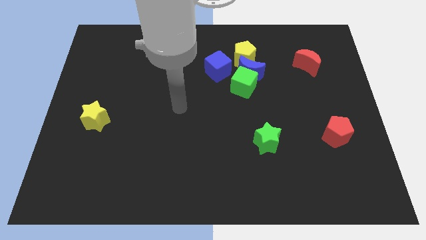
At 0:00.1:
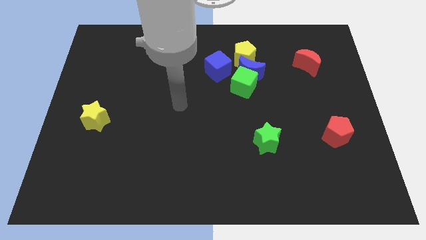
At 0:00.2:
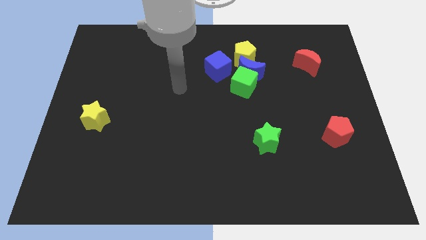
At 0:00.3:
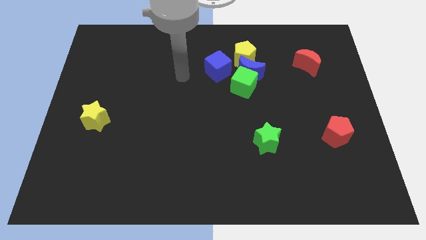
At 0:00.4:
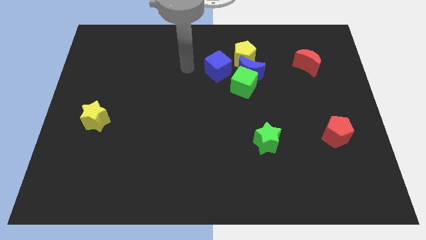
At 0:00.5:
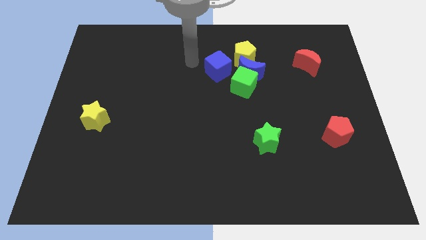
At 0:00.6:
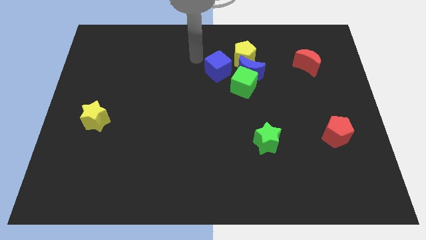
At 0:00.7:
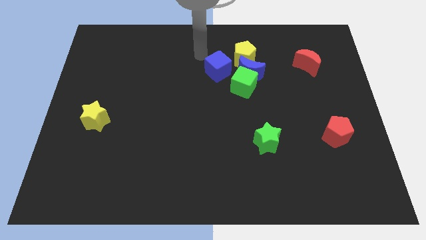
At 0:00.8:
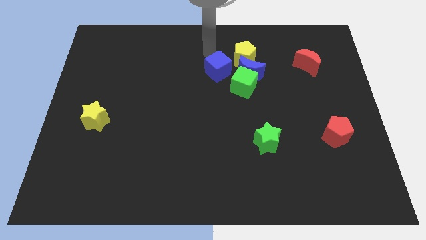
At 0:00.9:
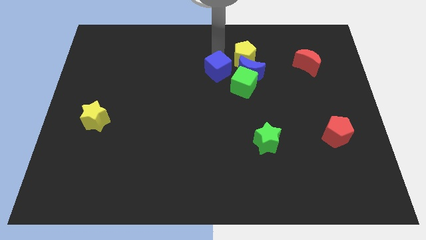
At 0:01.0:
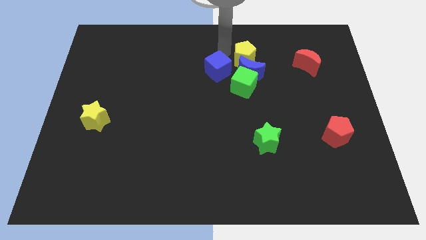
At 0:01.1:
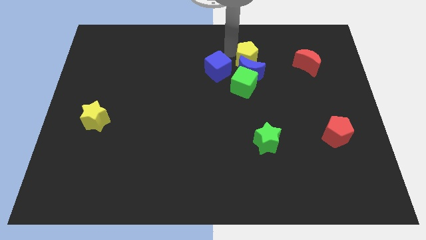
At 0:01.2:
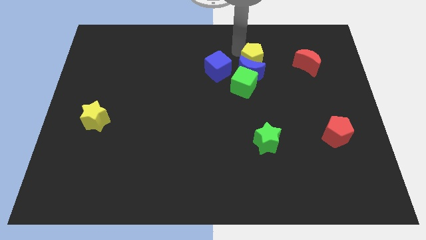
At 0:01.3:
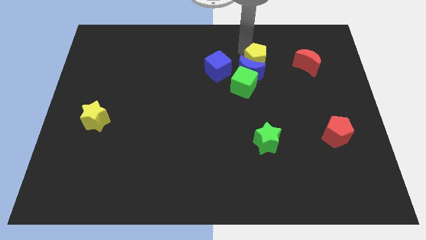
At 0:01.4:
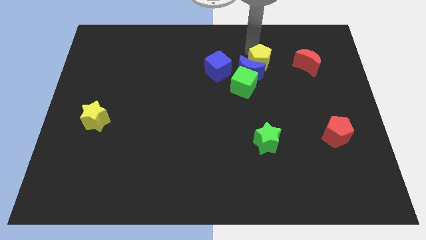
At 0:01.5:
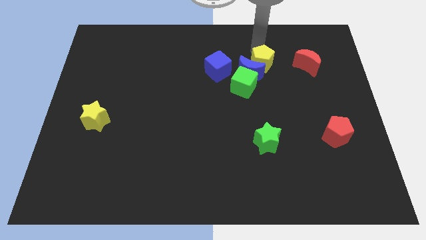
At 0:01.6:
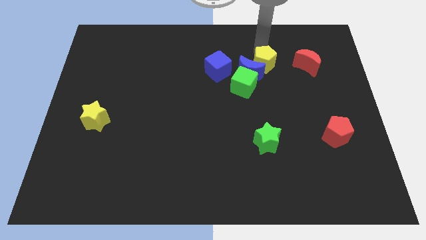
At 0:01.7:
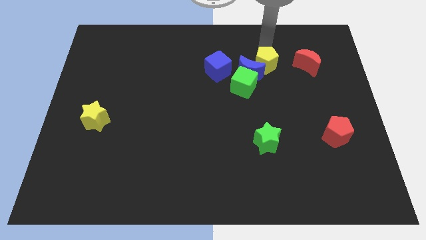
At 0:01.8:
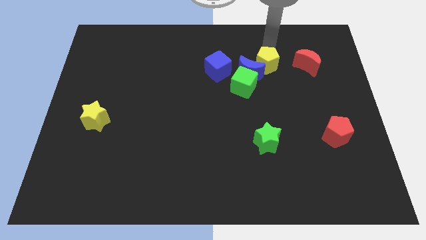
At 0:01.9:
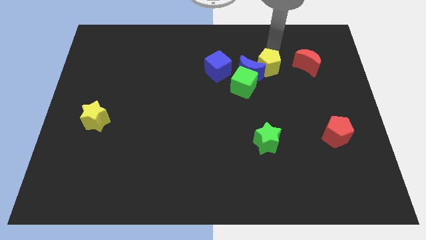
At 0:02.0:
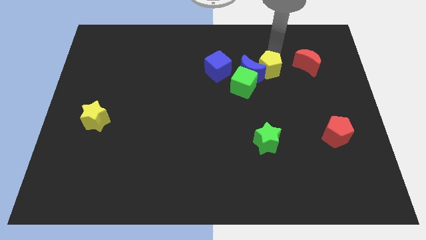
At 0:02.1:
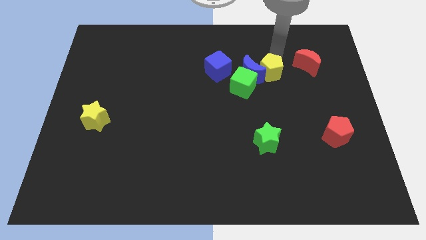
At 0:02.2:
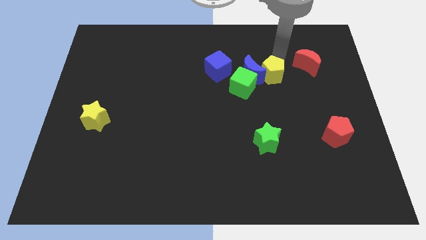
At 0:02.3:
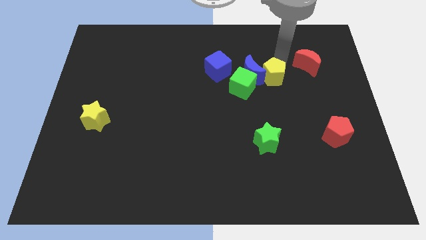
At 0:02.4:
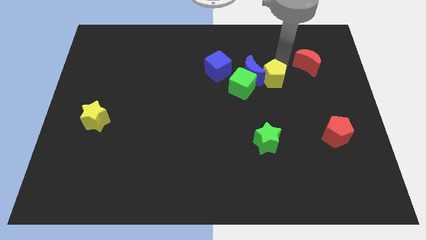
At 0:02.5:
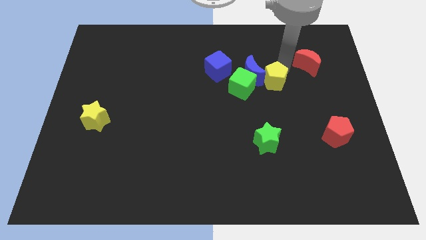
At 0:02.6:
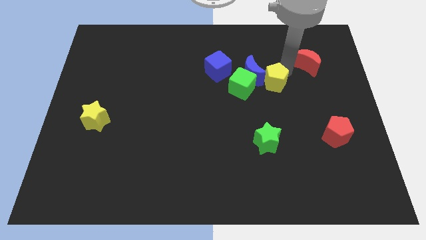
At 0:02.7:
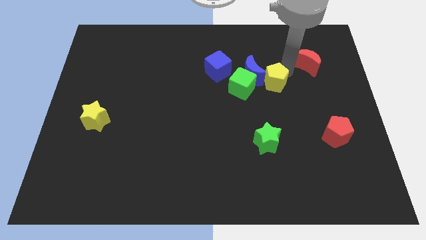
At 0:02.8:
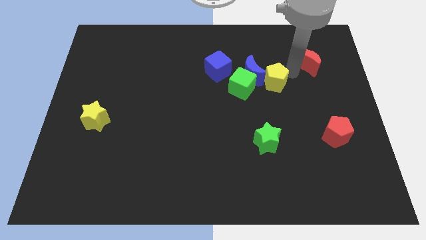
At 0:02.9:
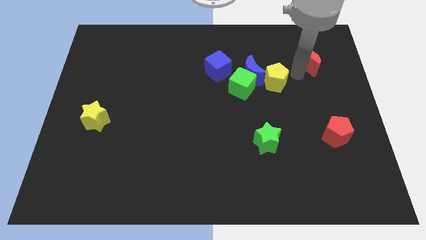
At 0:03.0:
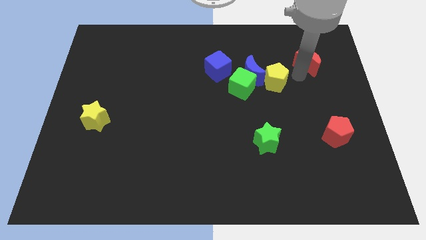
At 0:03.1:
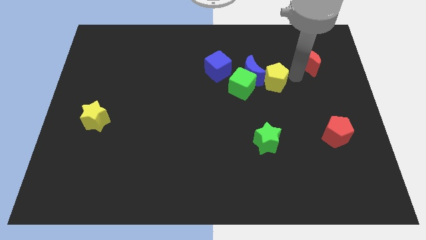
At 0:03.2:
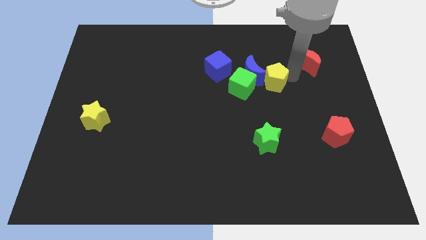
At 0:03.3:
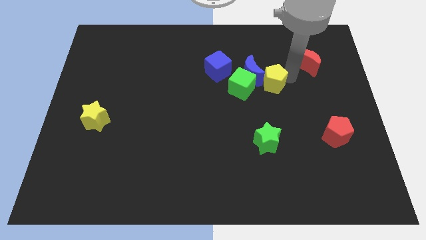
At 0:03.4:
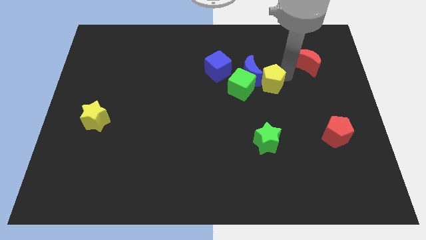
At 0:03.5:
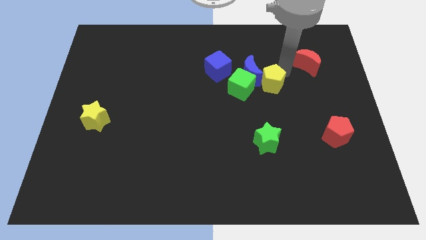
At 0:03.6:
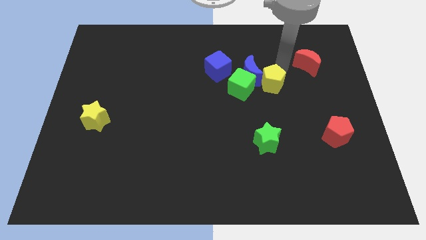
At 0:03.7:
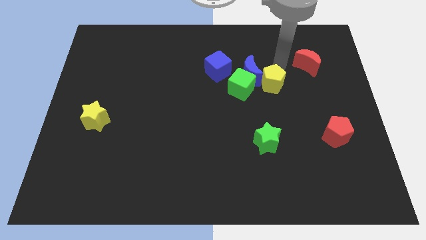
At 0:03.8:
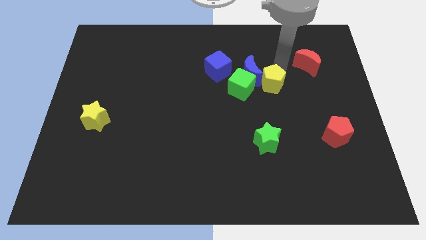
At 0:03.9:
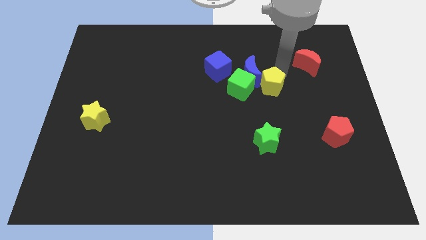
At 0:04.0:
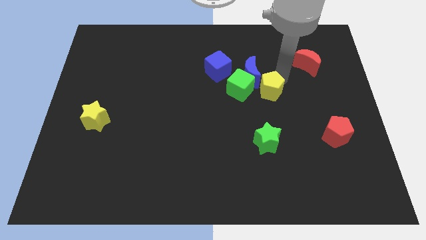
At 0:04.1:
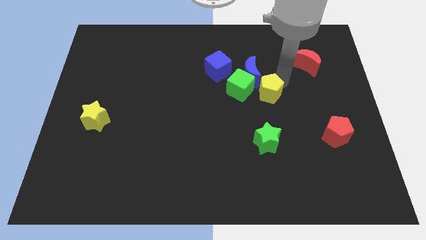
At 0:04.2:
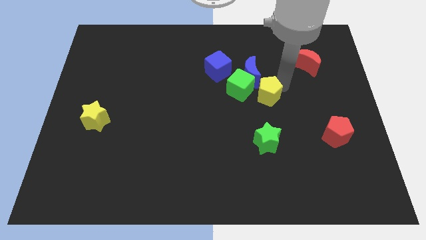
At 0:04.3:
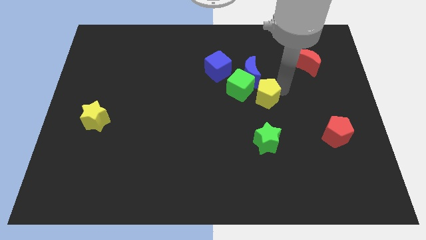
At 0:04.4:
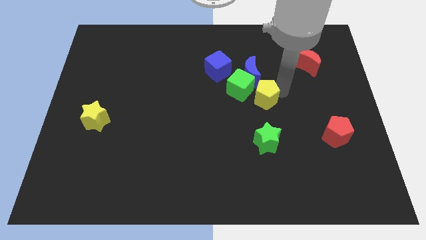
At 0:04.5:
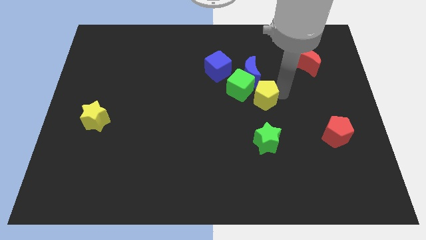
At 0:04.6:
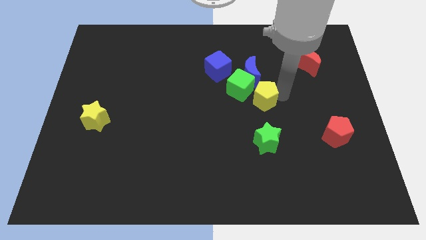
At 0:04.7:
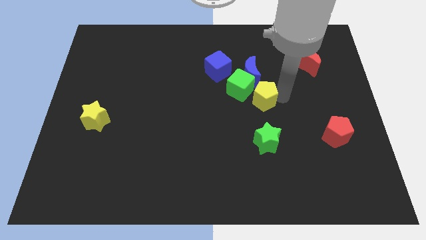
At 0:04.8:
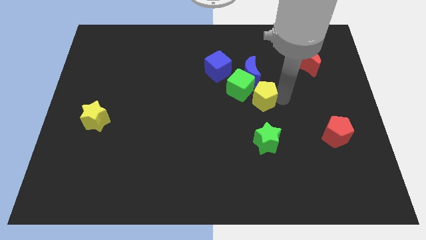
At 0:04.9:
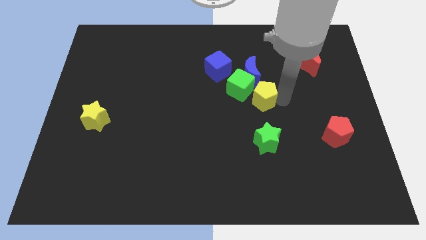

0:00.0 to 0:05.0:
move the yellow pentagon close to the green cube

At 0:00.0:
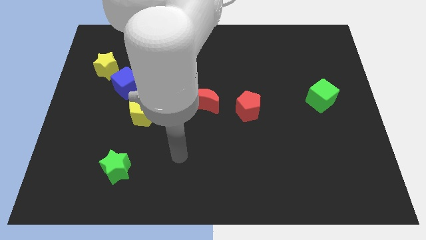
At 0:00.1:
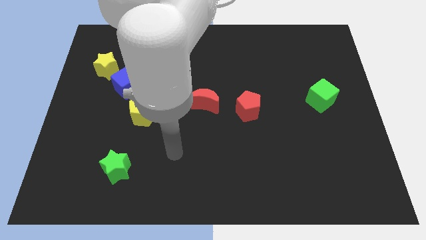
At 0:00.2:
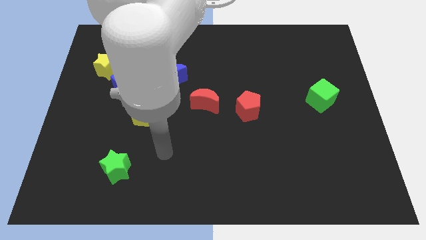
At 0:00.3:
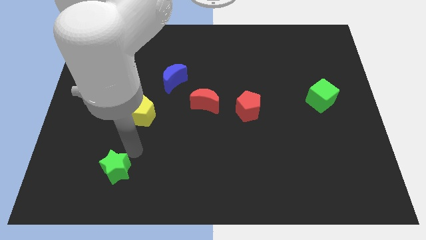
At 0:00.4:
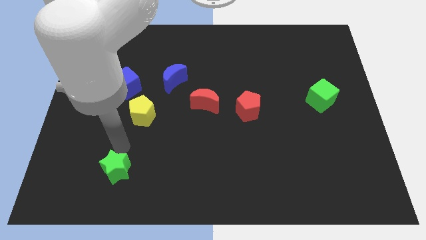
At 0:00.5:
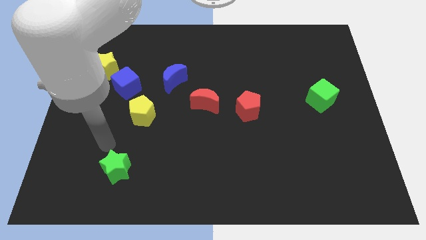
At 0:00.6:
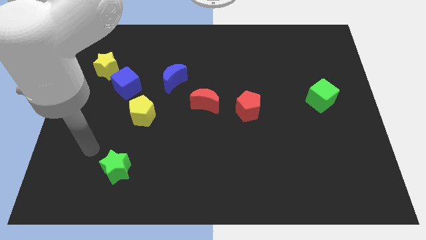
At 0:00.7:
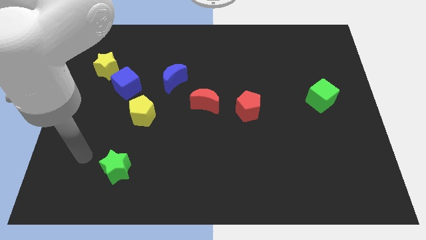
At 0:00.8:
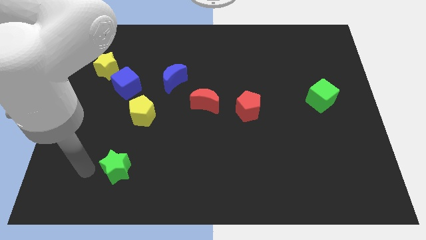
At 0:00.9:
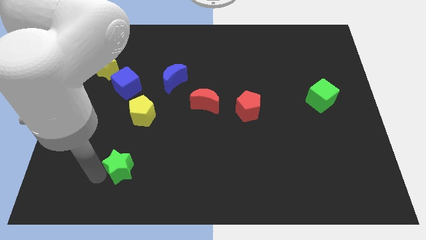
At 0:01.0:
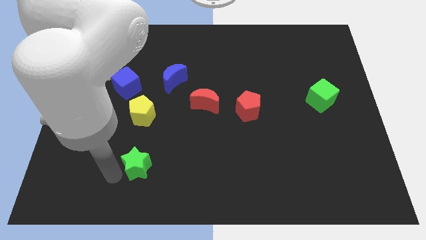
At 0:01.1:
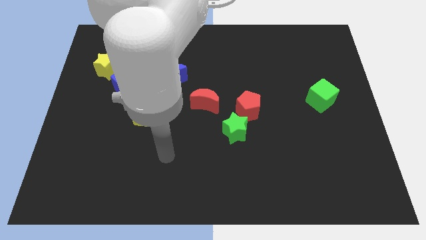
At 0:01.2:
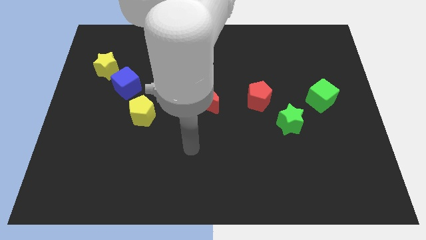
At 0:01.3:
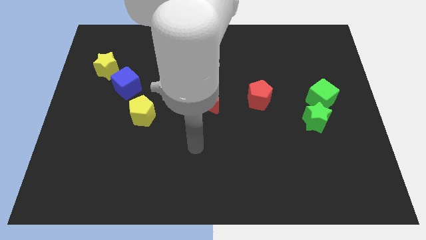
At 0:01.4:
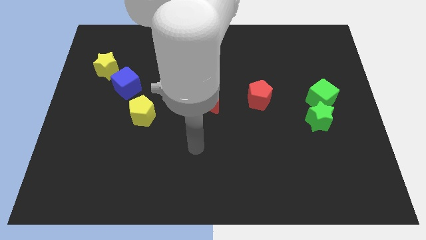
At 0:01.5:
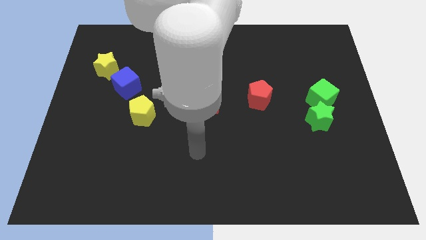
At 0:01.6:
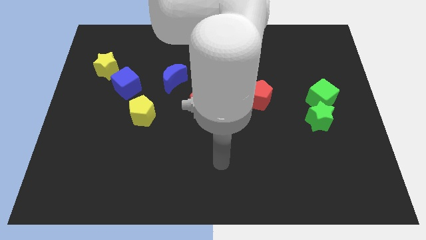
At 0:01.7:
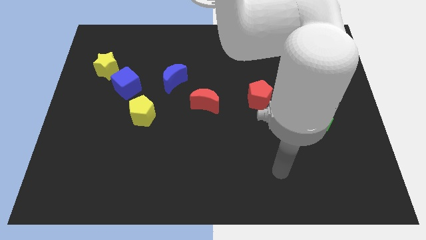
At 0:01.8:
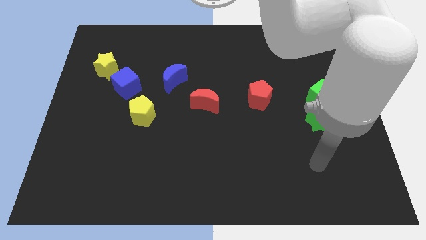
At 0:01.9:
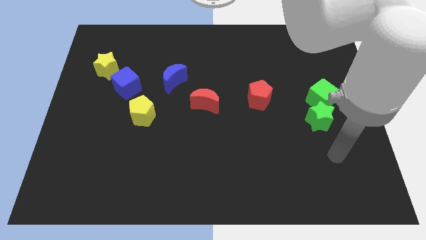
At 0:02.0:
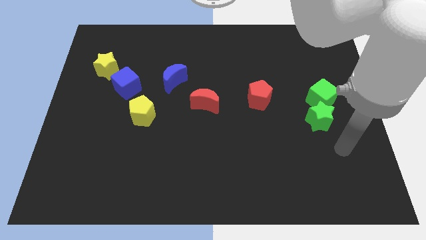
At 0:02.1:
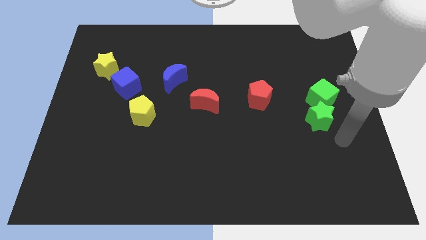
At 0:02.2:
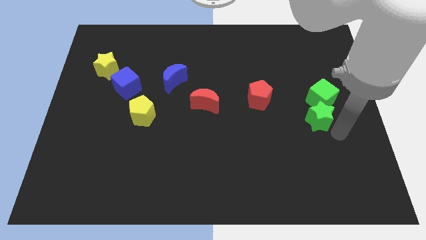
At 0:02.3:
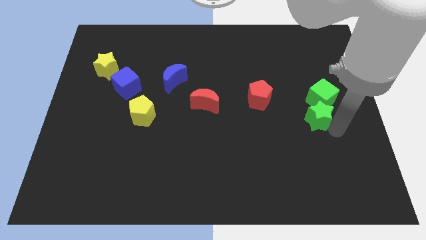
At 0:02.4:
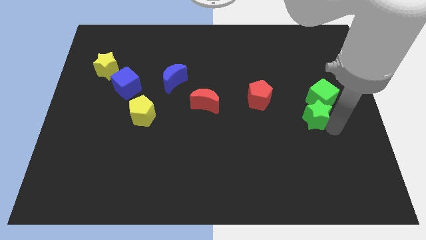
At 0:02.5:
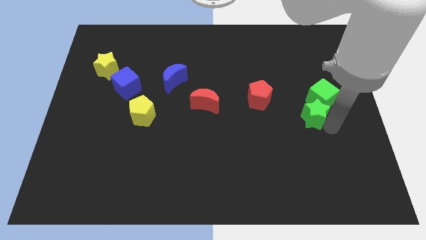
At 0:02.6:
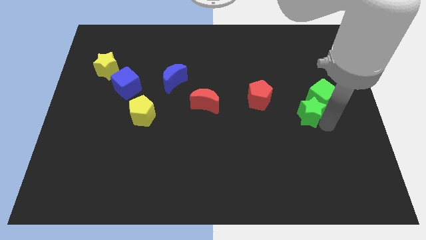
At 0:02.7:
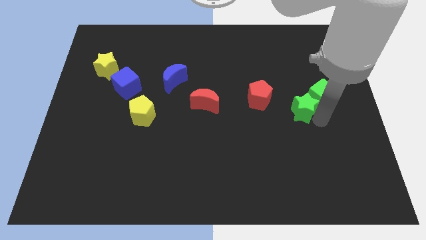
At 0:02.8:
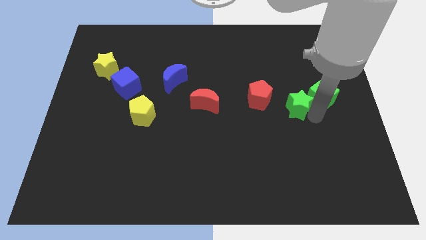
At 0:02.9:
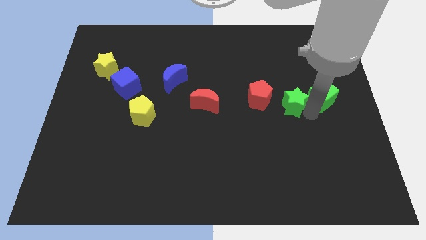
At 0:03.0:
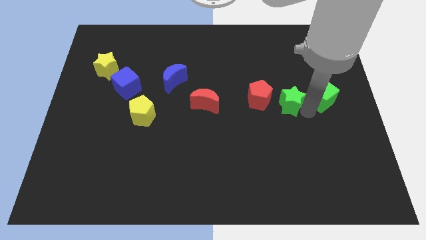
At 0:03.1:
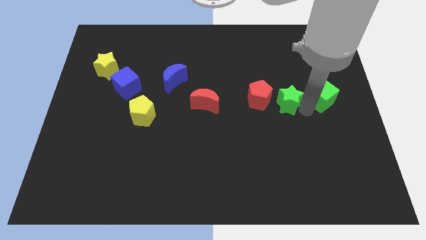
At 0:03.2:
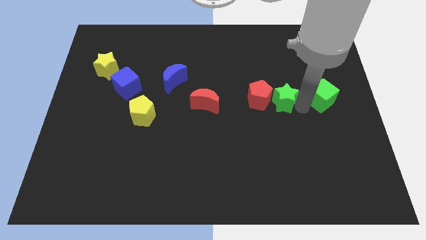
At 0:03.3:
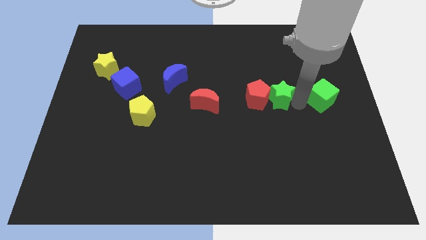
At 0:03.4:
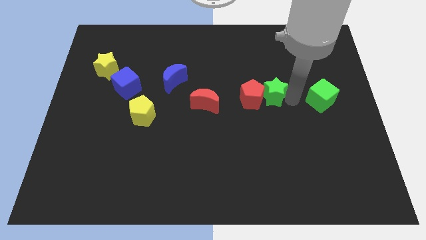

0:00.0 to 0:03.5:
move the green star to the red pentagon

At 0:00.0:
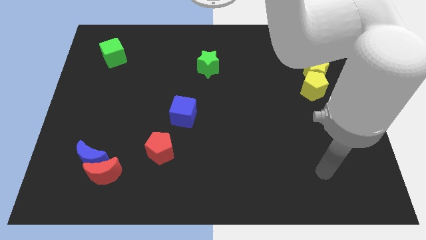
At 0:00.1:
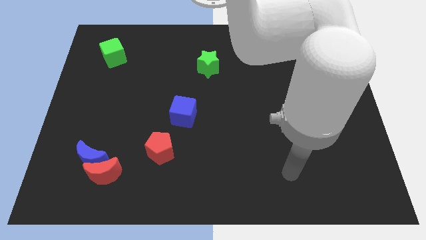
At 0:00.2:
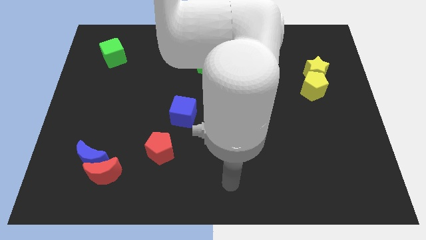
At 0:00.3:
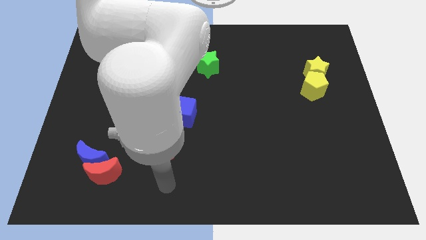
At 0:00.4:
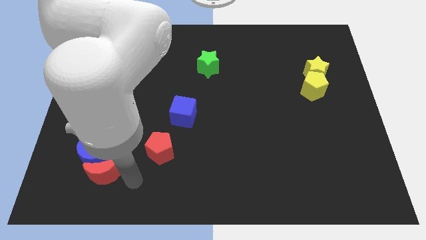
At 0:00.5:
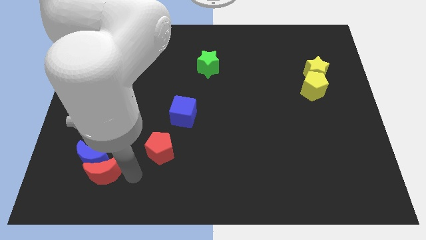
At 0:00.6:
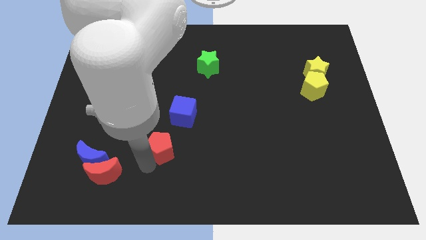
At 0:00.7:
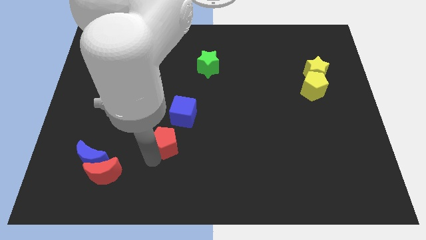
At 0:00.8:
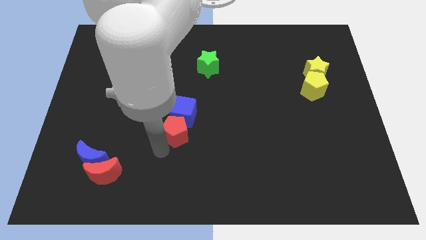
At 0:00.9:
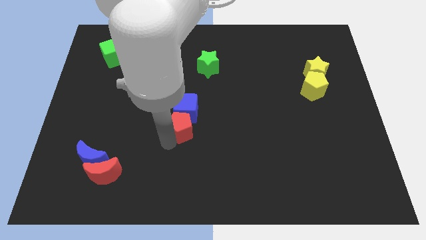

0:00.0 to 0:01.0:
push the red pentagon close to the blue cube
